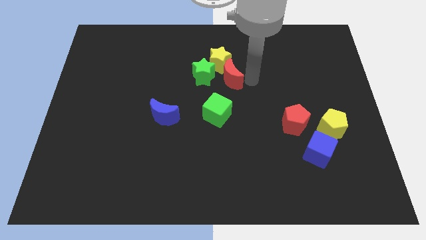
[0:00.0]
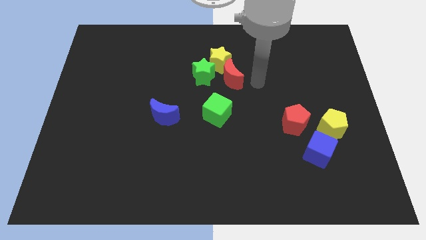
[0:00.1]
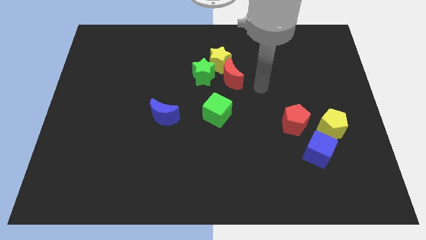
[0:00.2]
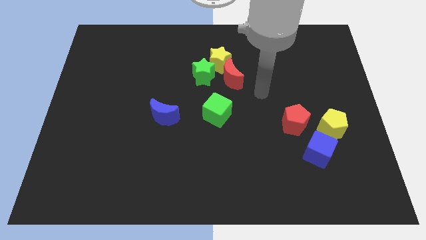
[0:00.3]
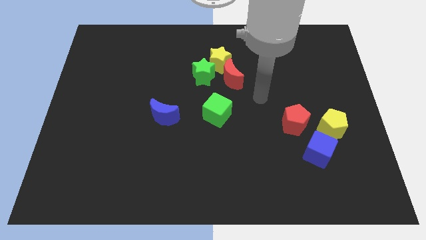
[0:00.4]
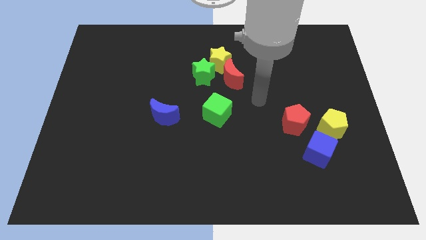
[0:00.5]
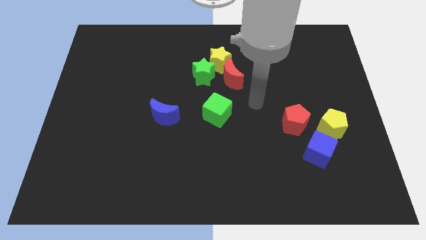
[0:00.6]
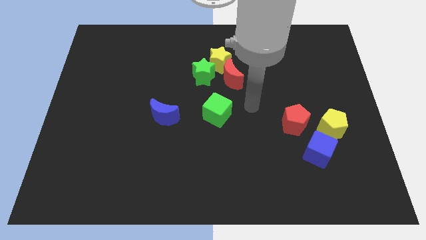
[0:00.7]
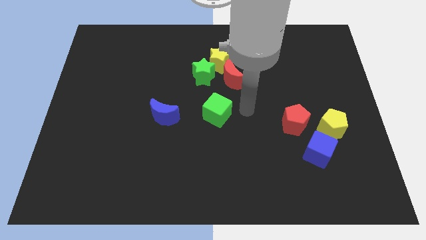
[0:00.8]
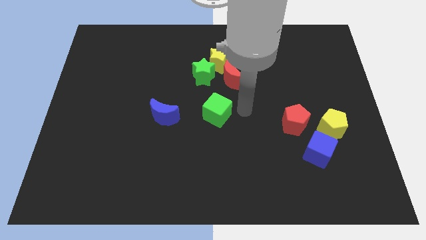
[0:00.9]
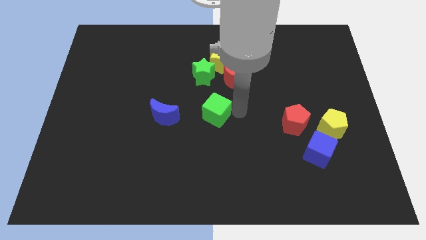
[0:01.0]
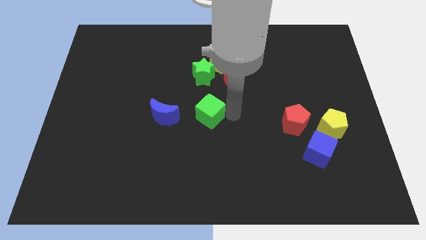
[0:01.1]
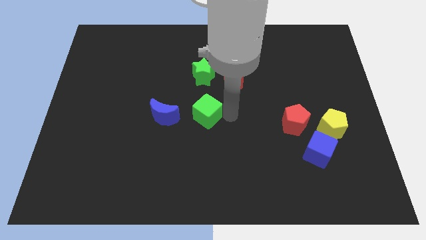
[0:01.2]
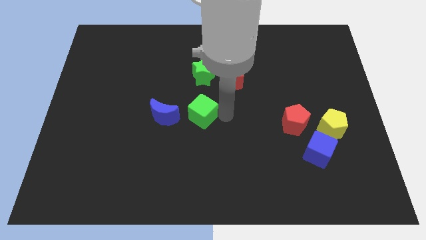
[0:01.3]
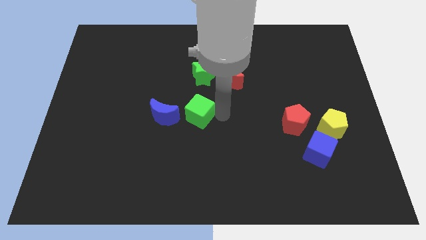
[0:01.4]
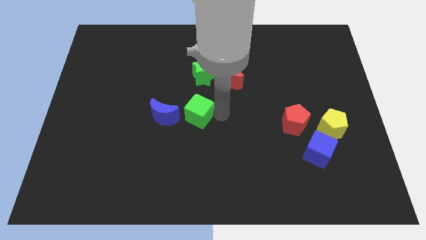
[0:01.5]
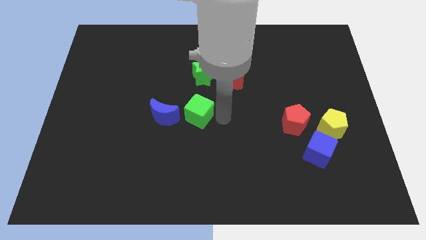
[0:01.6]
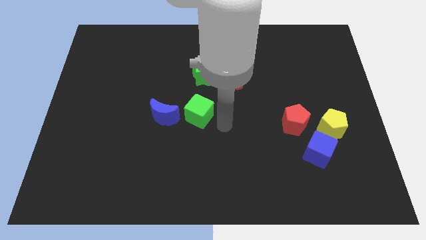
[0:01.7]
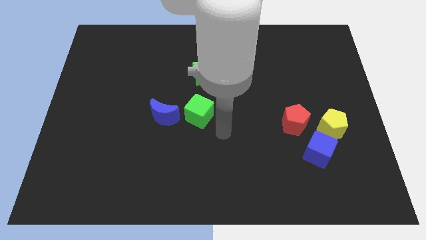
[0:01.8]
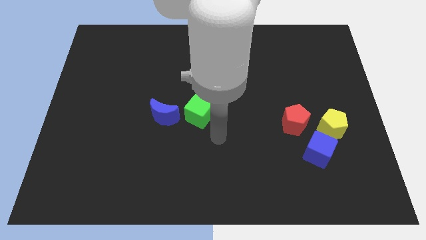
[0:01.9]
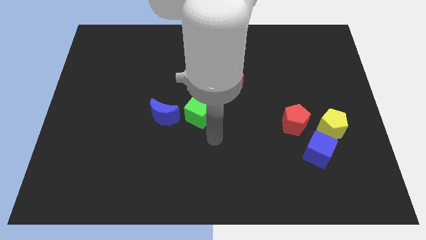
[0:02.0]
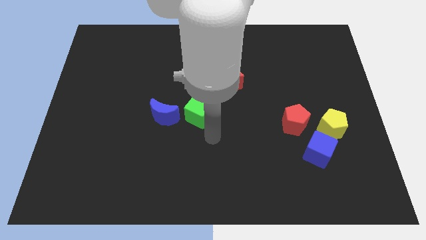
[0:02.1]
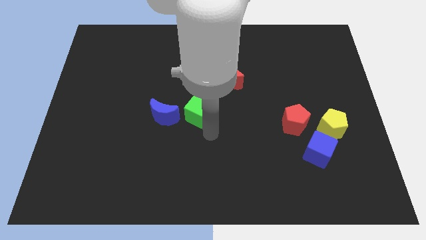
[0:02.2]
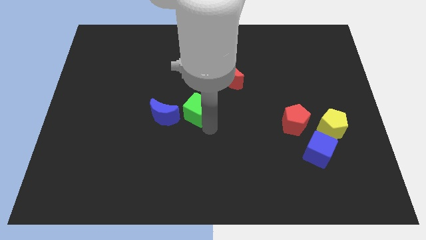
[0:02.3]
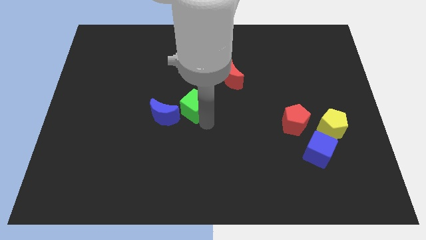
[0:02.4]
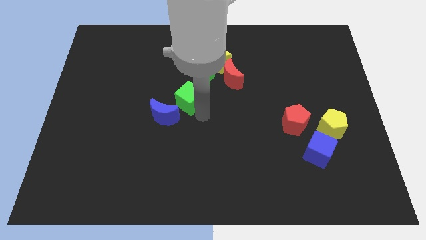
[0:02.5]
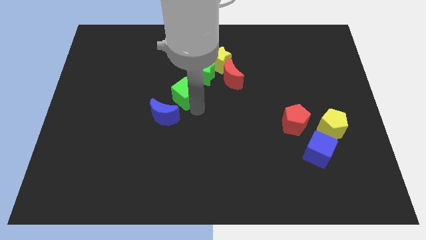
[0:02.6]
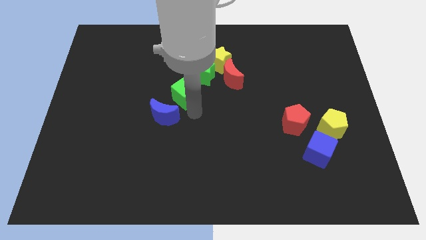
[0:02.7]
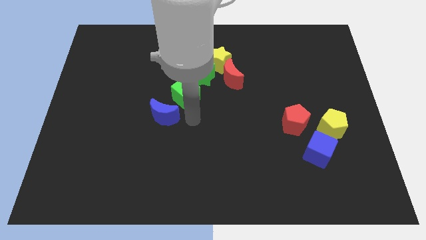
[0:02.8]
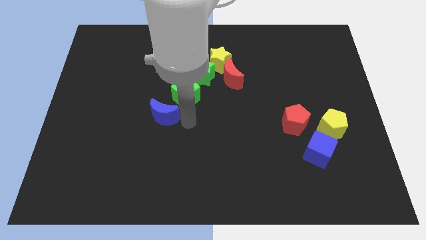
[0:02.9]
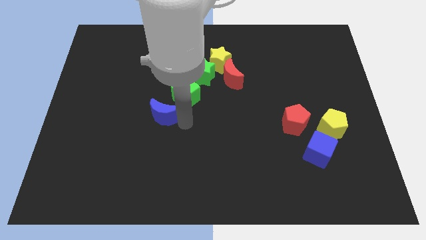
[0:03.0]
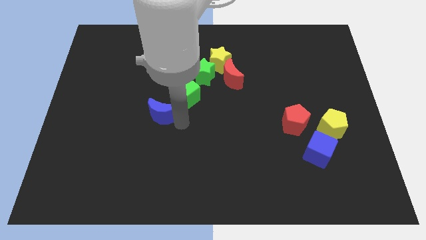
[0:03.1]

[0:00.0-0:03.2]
push the green cube to the bottom left of the green star

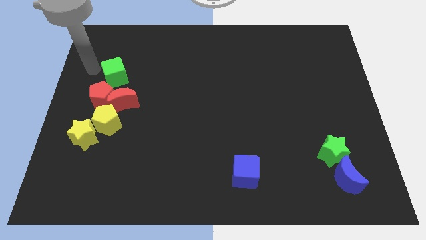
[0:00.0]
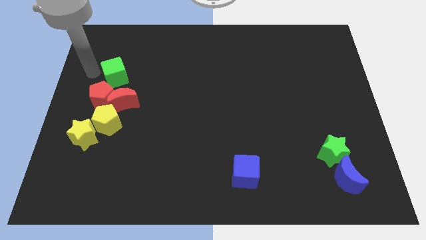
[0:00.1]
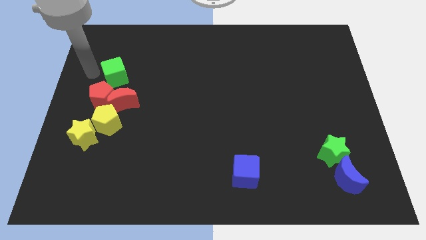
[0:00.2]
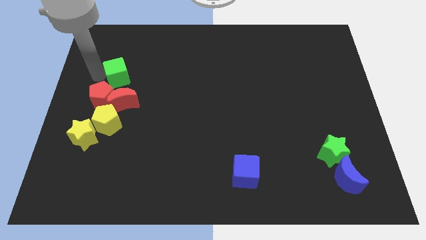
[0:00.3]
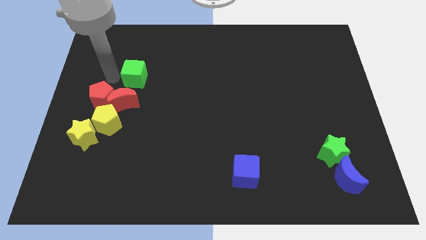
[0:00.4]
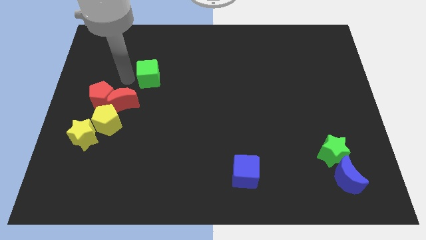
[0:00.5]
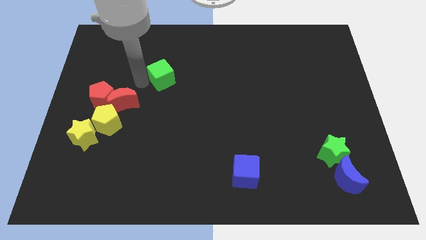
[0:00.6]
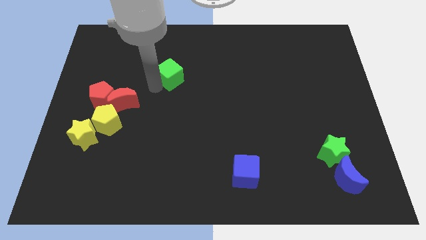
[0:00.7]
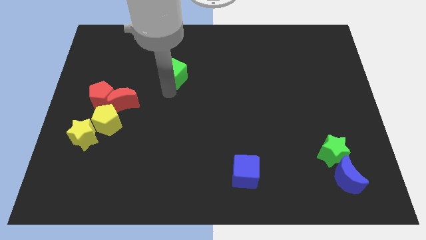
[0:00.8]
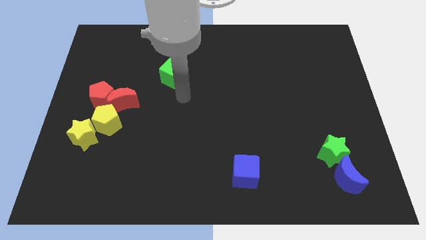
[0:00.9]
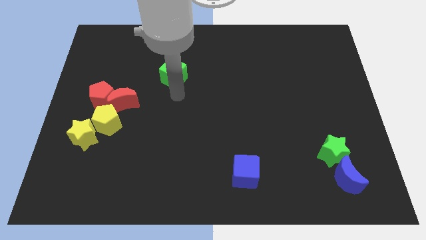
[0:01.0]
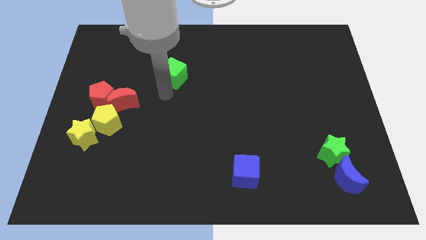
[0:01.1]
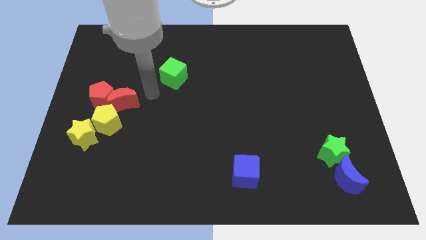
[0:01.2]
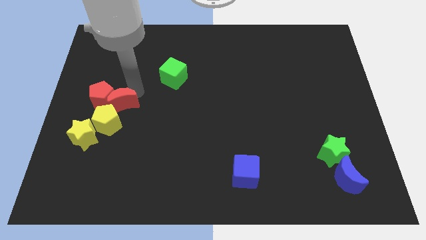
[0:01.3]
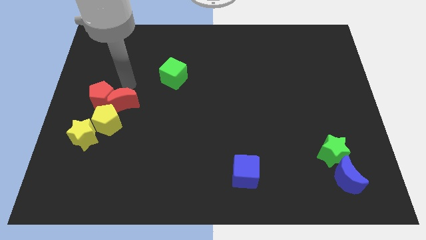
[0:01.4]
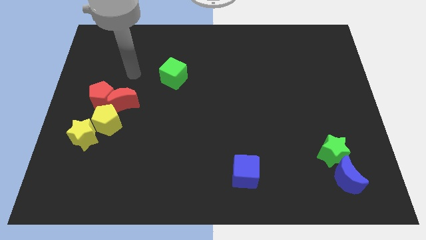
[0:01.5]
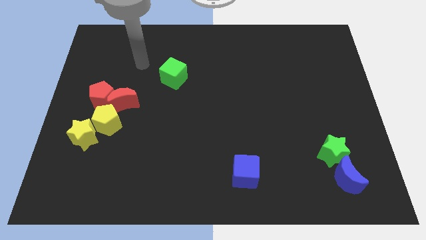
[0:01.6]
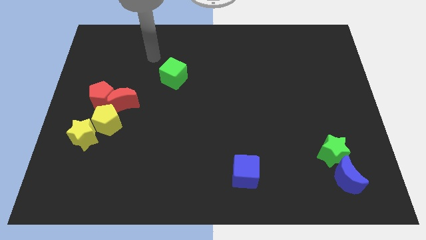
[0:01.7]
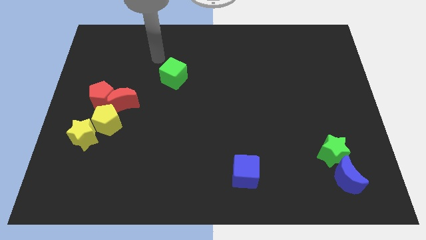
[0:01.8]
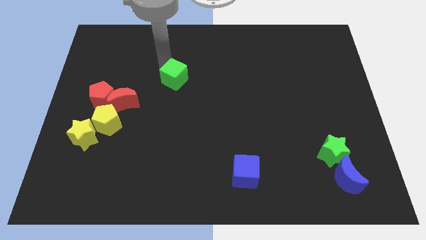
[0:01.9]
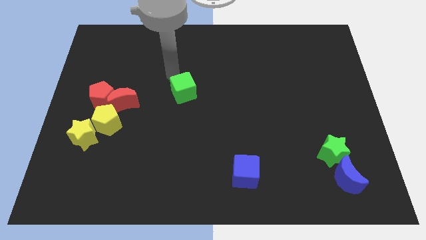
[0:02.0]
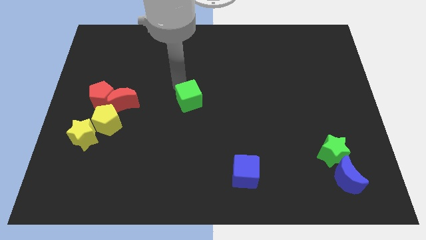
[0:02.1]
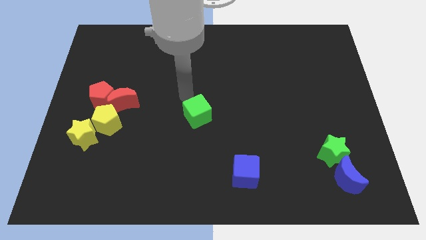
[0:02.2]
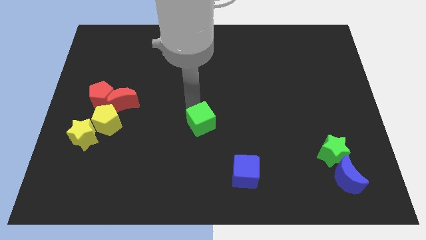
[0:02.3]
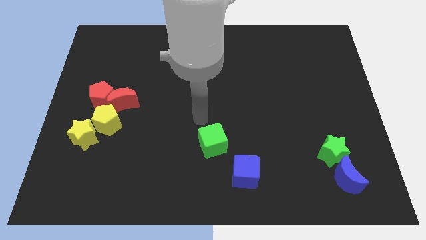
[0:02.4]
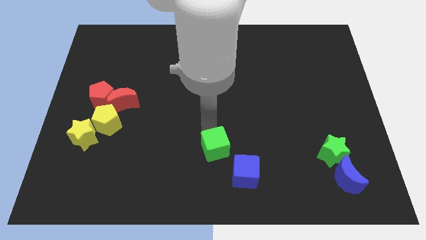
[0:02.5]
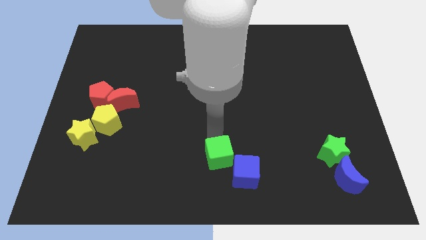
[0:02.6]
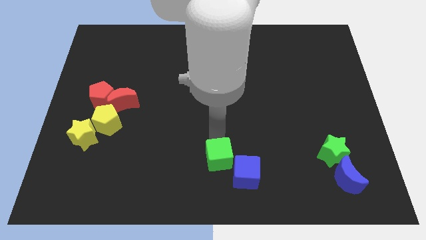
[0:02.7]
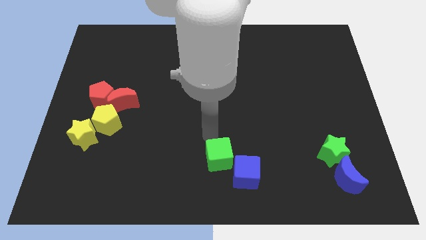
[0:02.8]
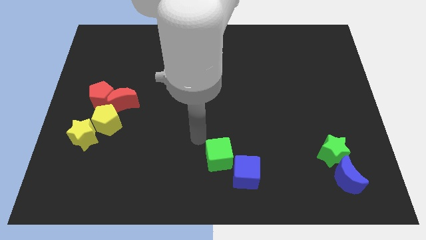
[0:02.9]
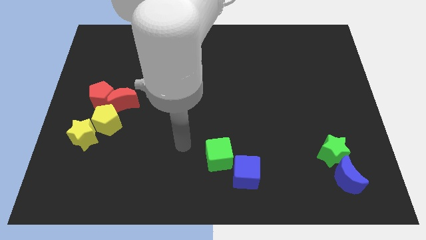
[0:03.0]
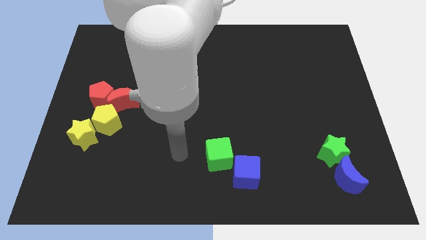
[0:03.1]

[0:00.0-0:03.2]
place the green cube to the top left of the blue cube

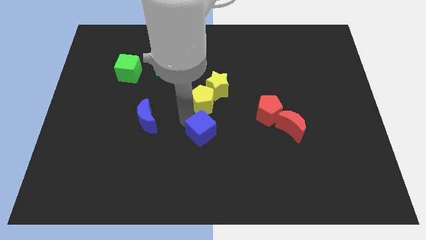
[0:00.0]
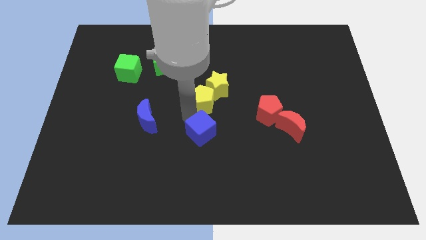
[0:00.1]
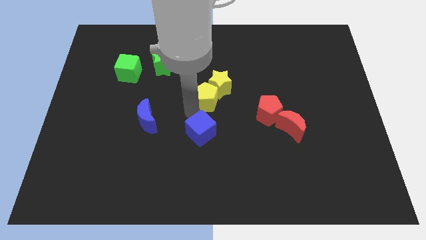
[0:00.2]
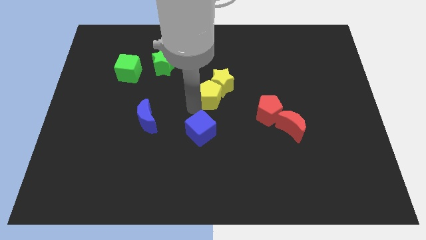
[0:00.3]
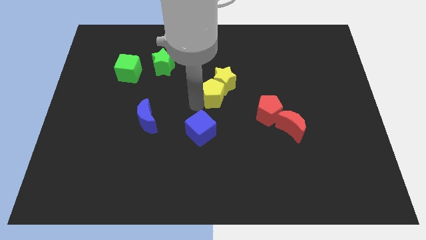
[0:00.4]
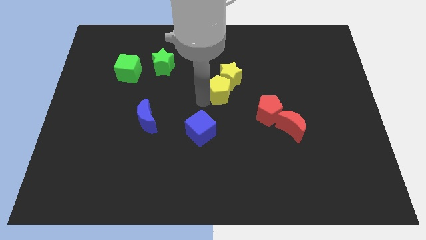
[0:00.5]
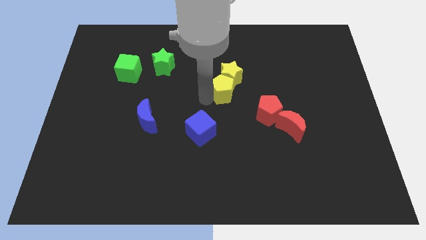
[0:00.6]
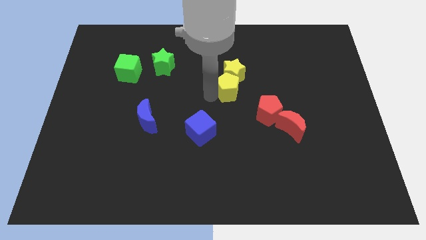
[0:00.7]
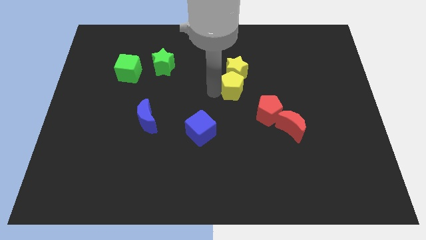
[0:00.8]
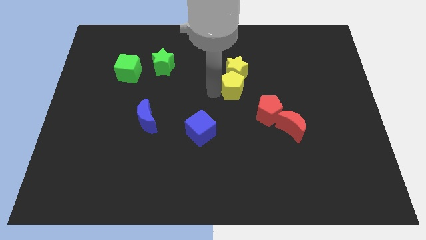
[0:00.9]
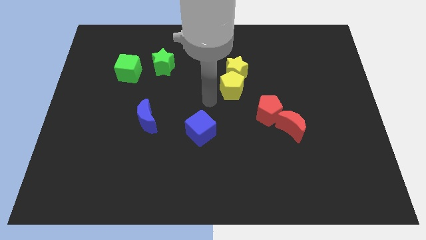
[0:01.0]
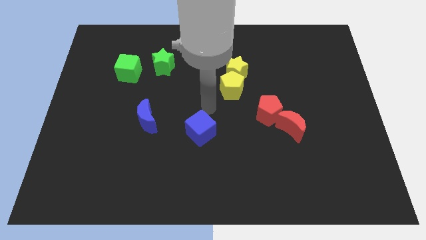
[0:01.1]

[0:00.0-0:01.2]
push the yellow pentagon and yellow star upward

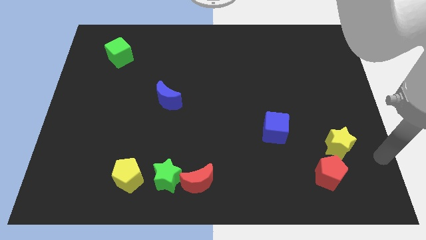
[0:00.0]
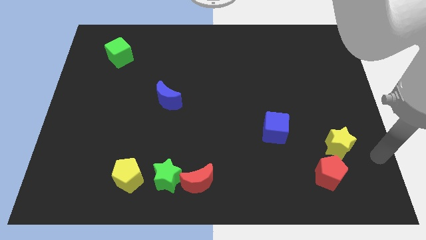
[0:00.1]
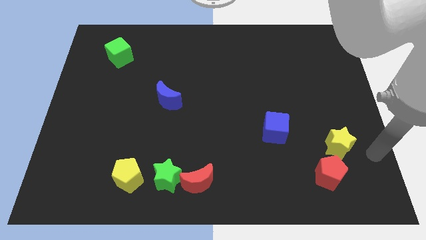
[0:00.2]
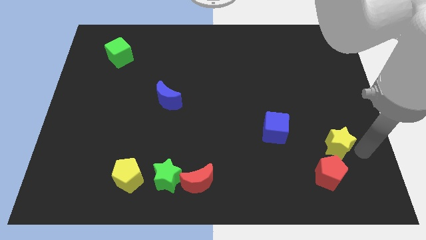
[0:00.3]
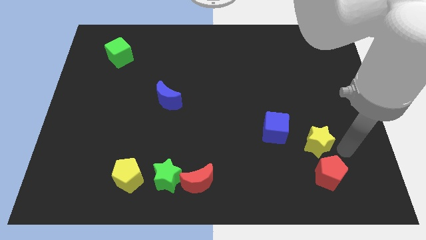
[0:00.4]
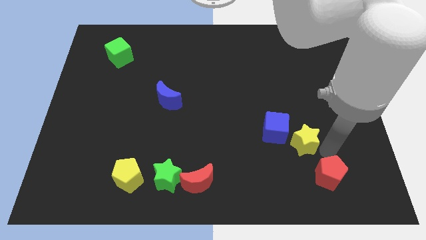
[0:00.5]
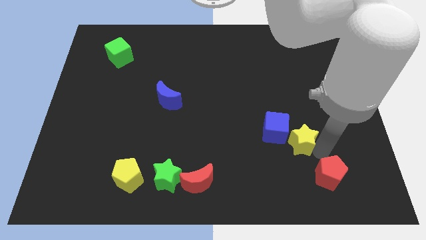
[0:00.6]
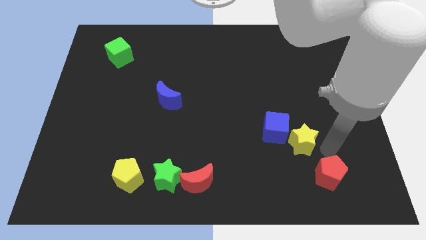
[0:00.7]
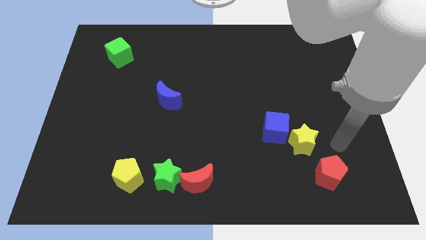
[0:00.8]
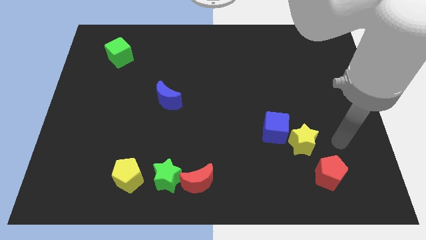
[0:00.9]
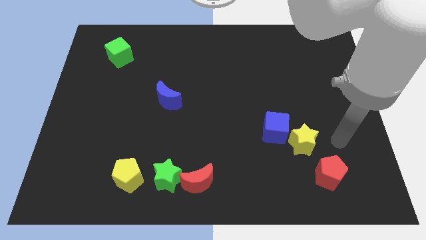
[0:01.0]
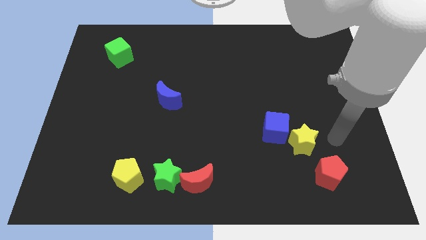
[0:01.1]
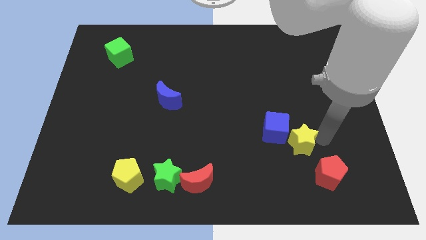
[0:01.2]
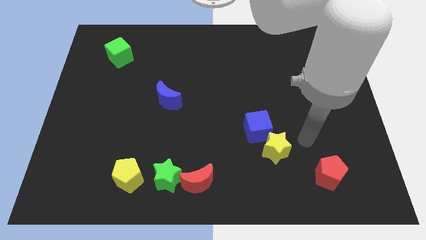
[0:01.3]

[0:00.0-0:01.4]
move the yellow star into the blue cube
